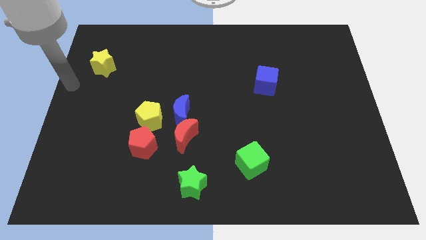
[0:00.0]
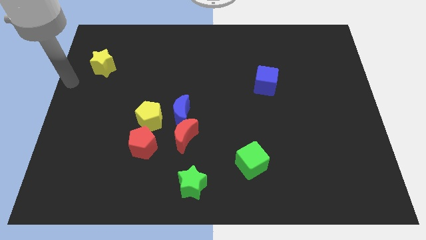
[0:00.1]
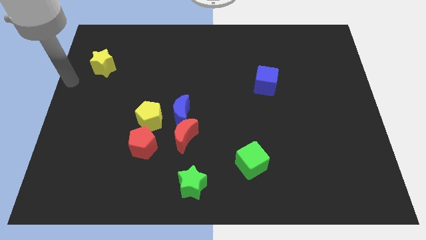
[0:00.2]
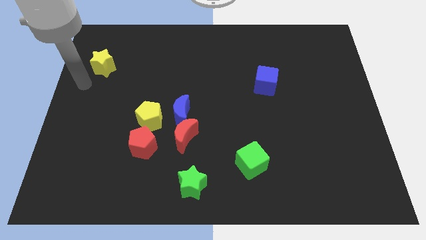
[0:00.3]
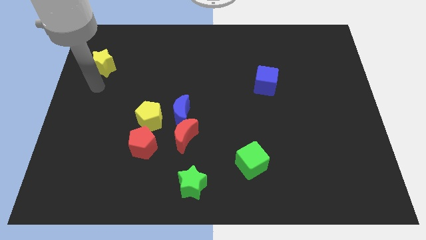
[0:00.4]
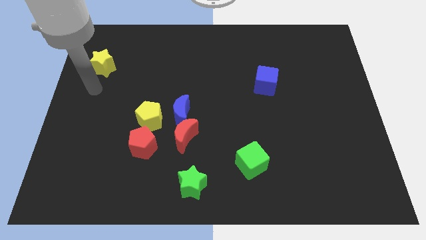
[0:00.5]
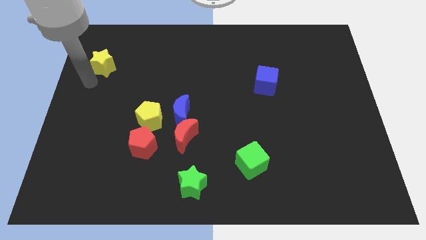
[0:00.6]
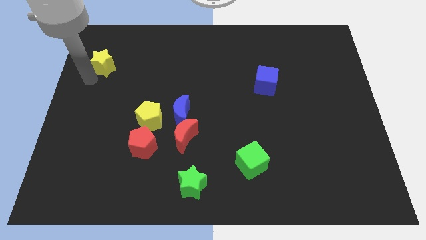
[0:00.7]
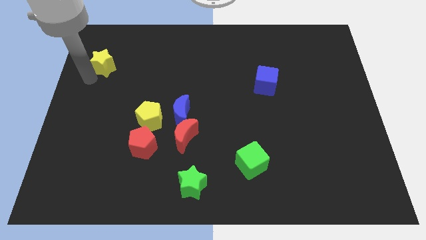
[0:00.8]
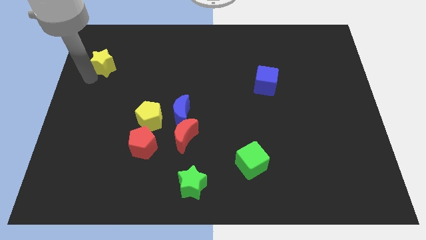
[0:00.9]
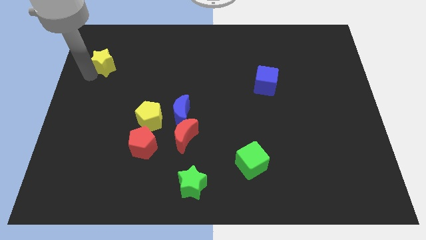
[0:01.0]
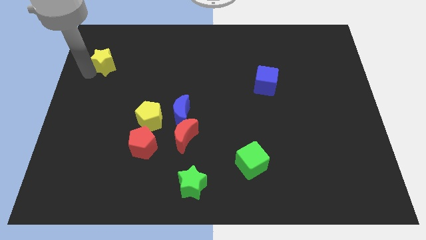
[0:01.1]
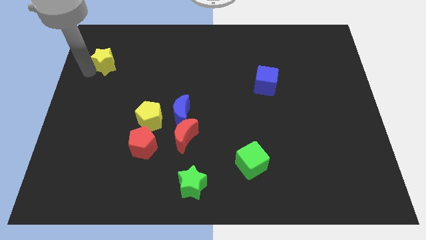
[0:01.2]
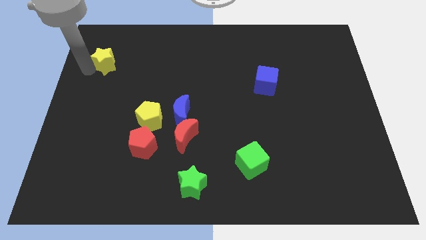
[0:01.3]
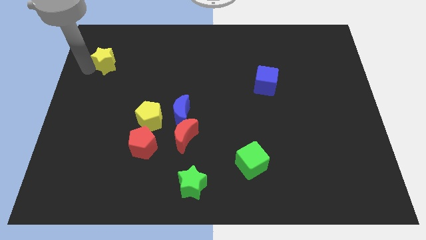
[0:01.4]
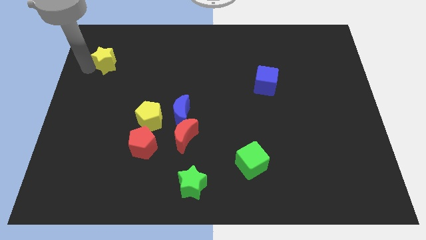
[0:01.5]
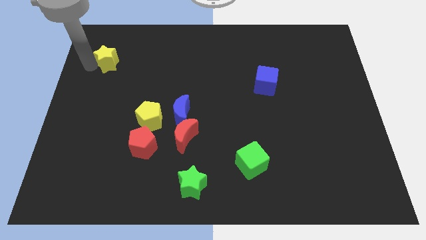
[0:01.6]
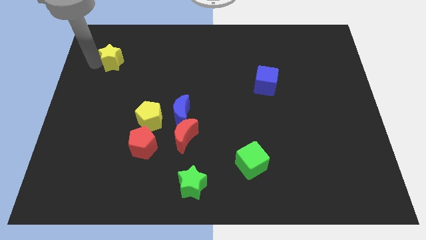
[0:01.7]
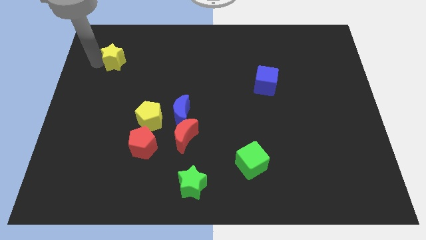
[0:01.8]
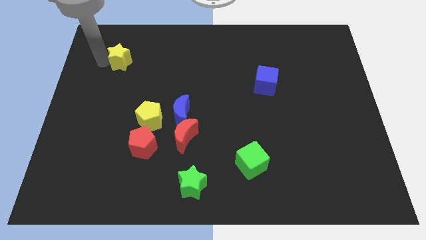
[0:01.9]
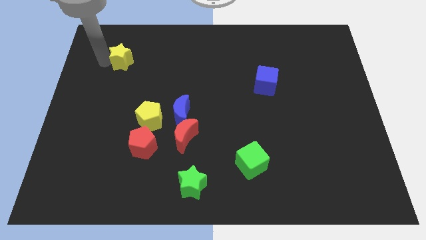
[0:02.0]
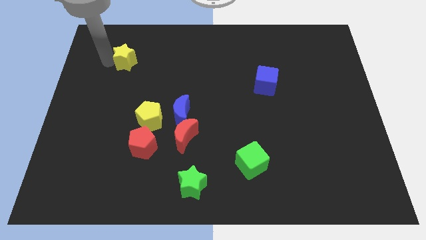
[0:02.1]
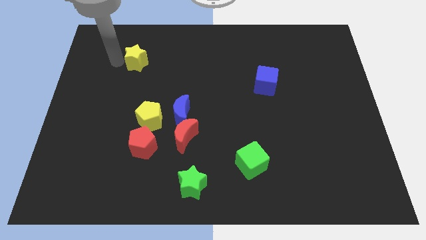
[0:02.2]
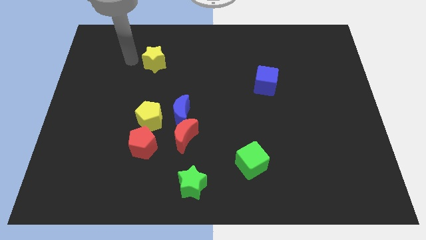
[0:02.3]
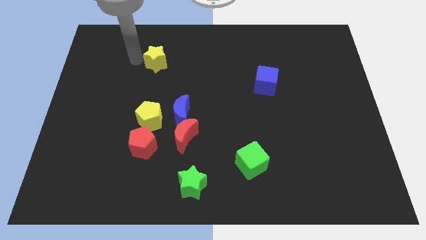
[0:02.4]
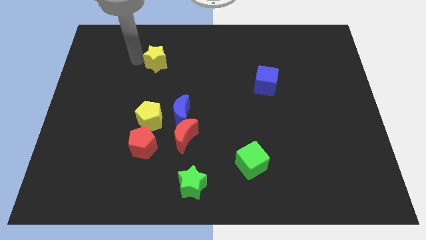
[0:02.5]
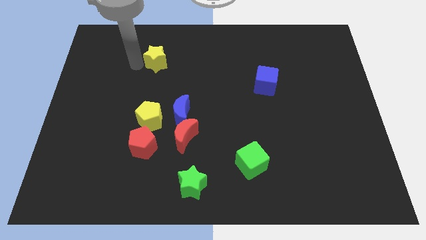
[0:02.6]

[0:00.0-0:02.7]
move yellow star parallel above yellow pentagon

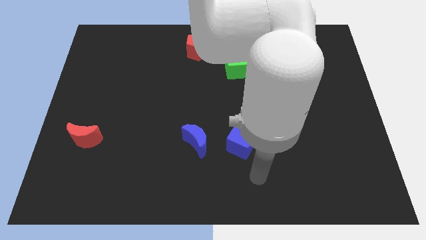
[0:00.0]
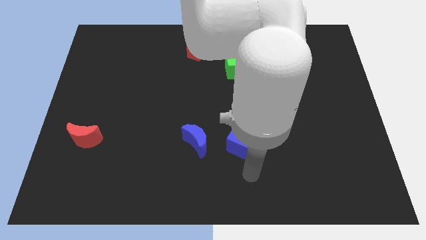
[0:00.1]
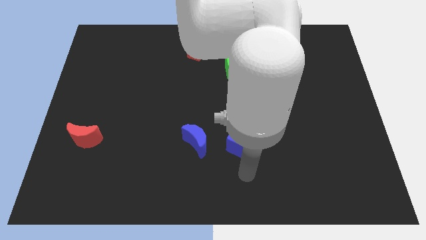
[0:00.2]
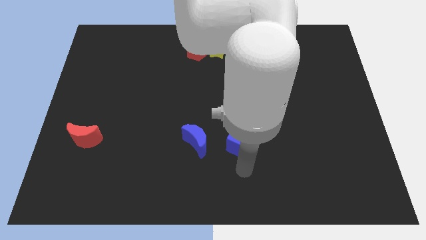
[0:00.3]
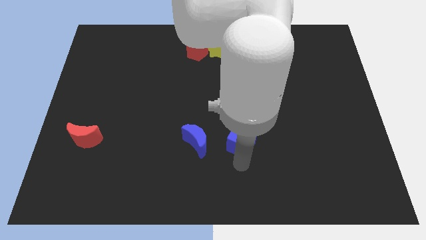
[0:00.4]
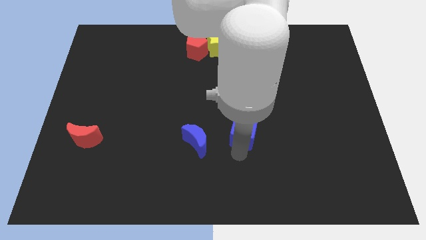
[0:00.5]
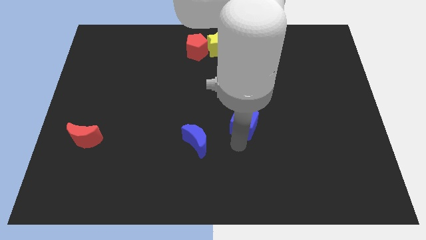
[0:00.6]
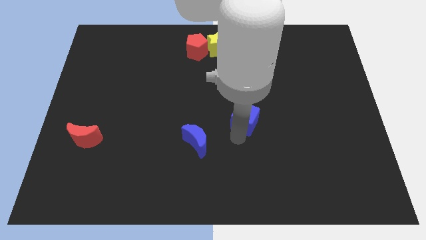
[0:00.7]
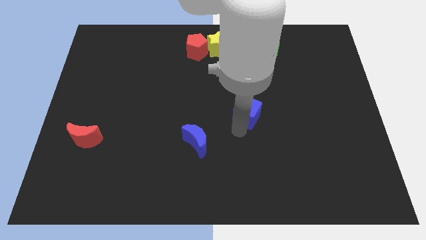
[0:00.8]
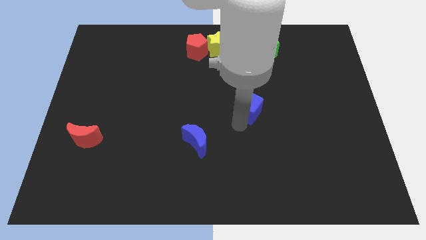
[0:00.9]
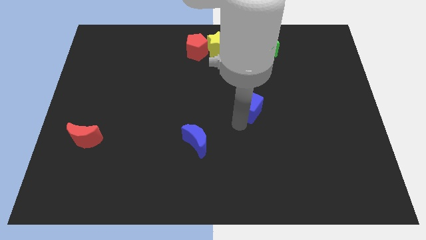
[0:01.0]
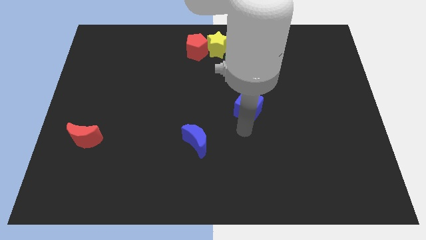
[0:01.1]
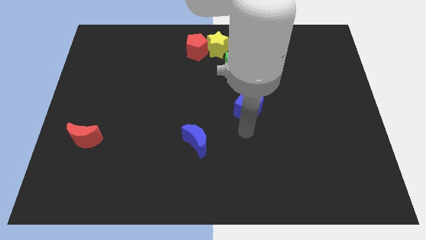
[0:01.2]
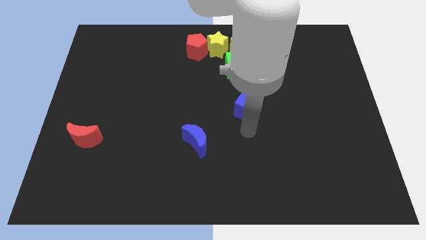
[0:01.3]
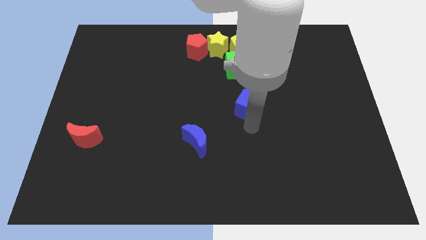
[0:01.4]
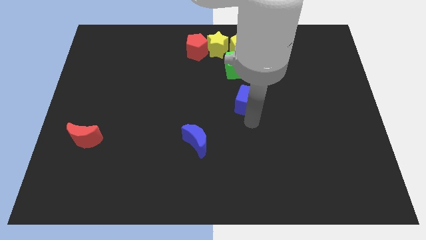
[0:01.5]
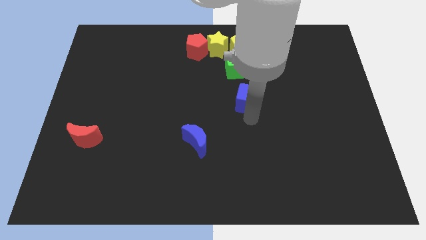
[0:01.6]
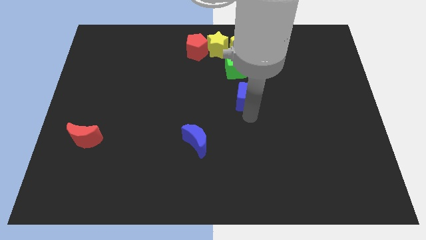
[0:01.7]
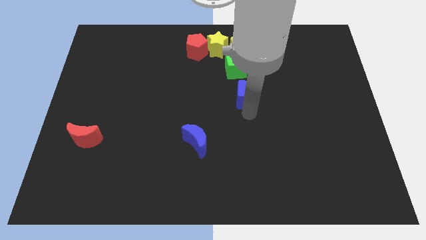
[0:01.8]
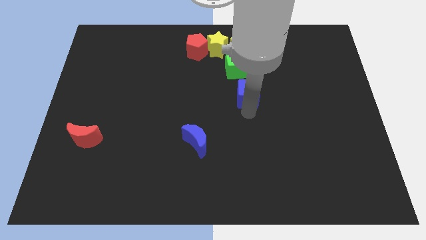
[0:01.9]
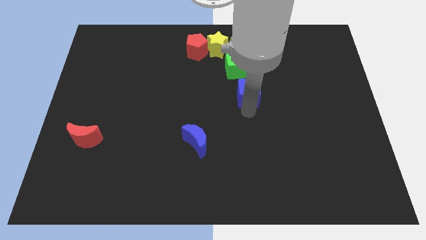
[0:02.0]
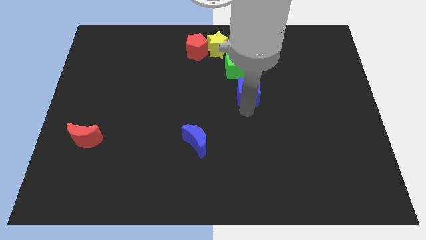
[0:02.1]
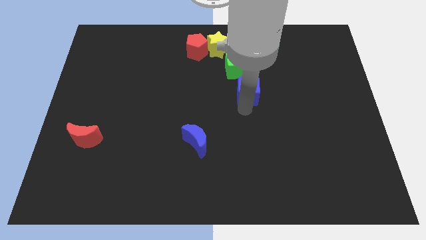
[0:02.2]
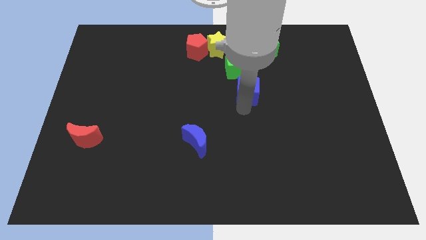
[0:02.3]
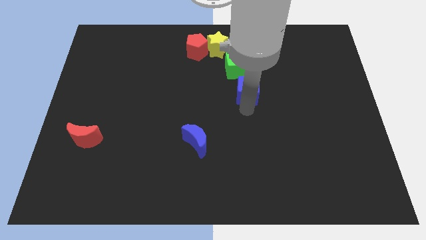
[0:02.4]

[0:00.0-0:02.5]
push the blue cube to the bottom of the green cube

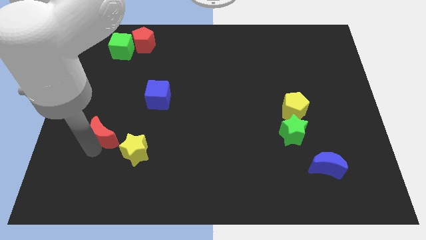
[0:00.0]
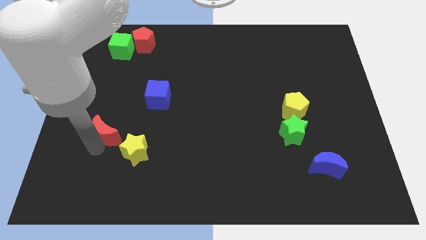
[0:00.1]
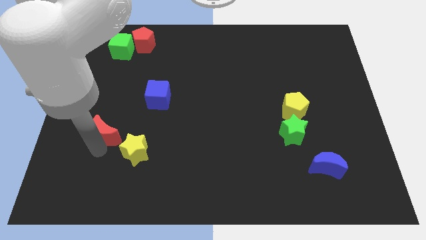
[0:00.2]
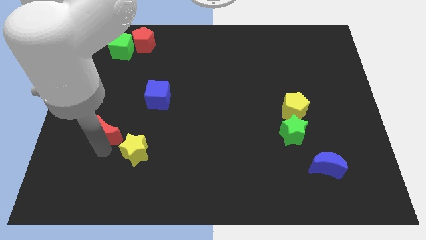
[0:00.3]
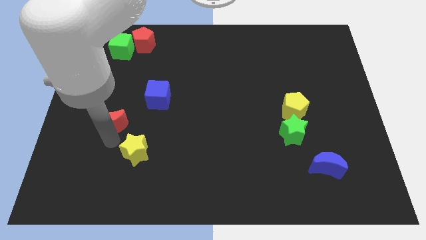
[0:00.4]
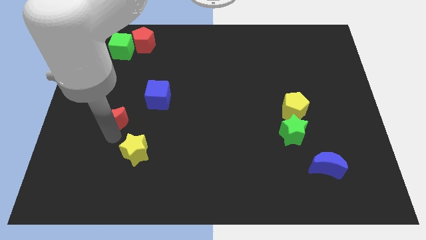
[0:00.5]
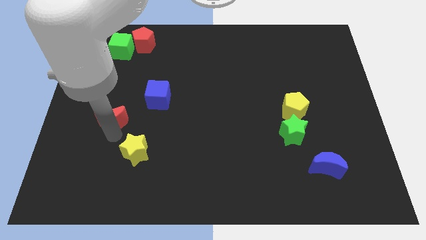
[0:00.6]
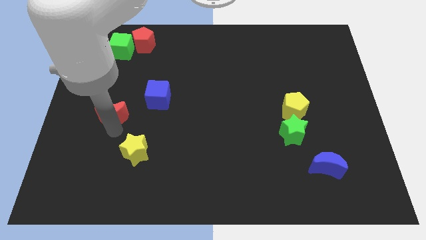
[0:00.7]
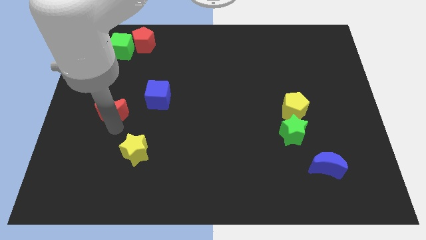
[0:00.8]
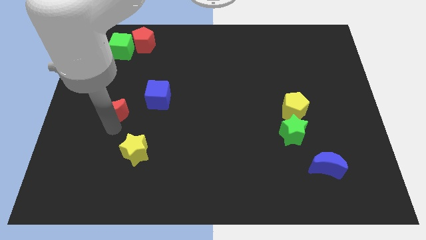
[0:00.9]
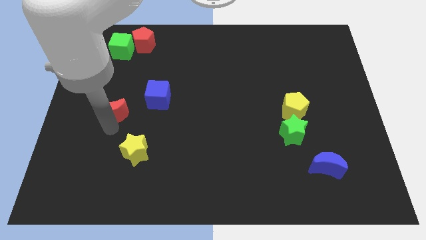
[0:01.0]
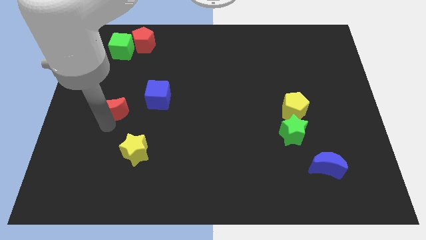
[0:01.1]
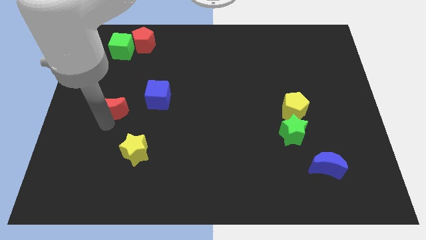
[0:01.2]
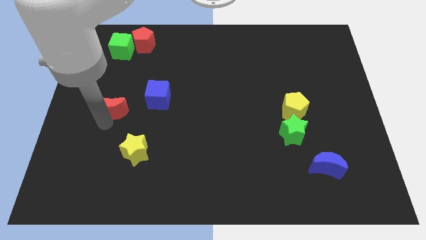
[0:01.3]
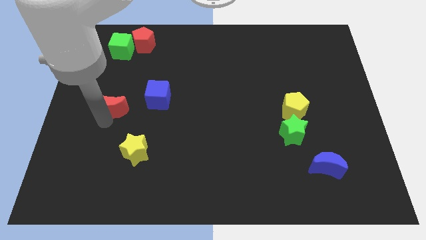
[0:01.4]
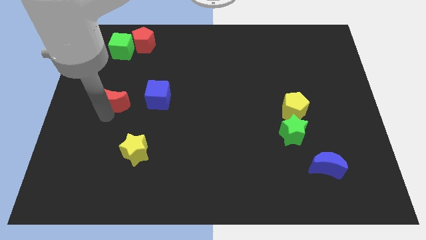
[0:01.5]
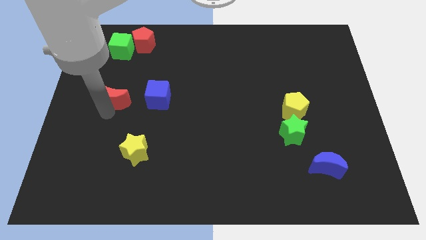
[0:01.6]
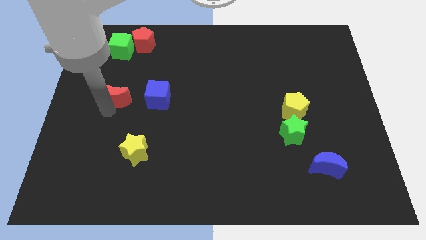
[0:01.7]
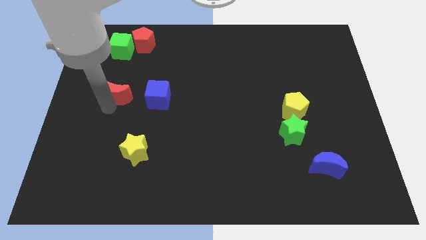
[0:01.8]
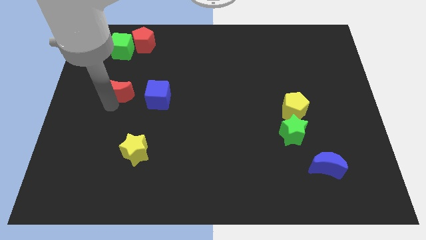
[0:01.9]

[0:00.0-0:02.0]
put the red crescent to the left side of the blue cube

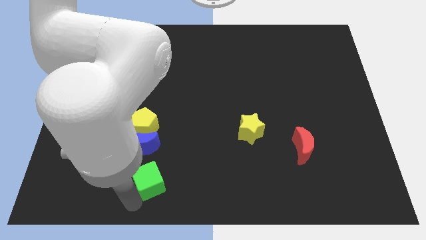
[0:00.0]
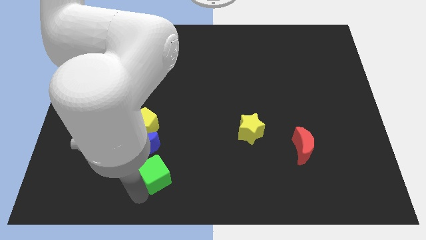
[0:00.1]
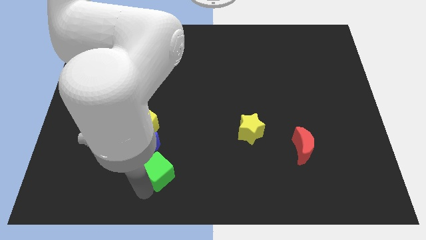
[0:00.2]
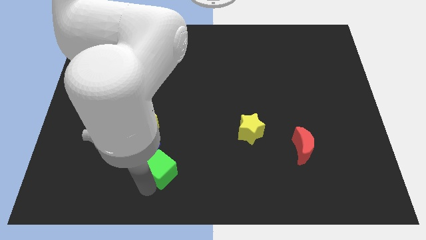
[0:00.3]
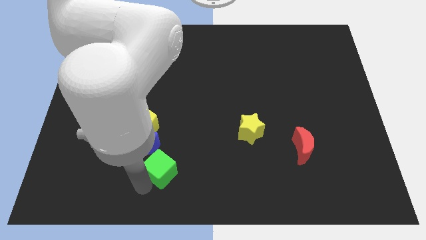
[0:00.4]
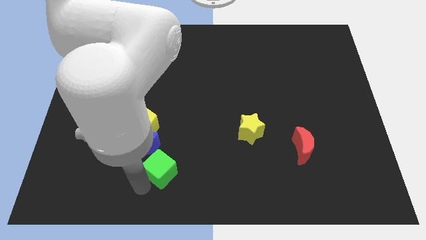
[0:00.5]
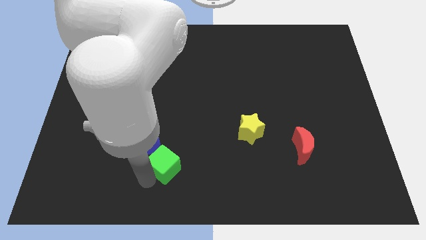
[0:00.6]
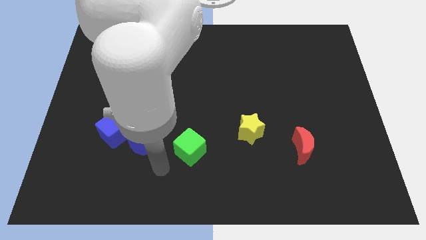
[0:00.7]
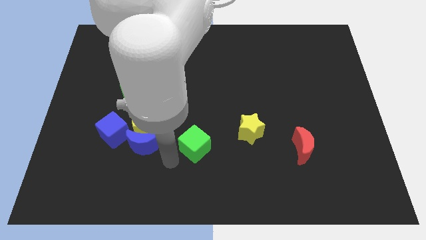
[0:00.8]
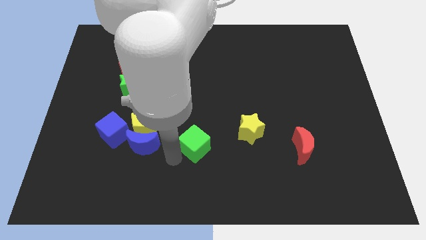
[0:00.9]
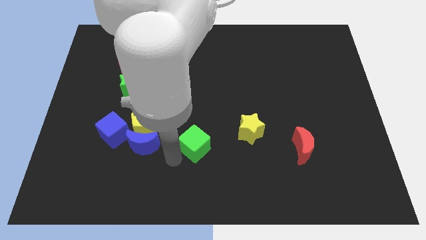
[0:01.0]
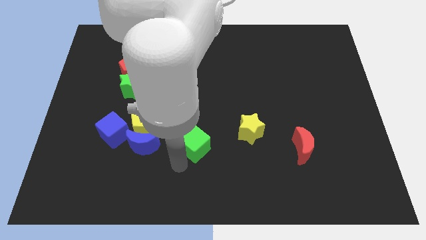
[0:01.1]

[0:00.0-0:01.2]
push the green cube to bottom left of yellow star

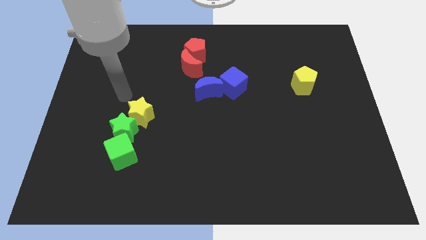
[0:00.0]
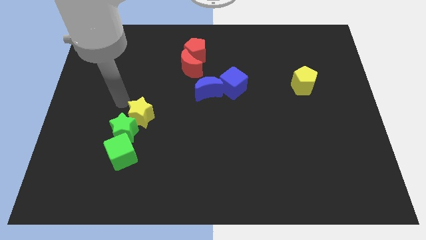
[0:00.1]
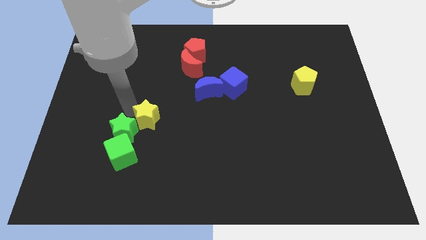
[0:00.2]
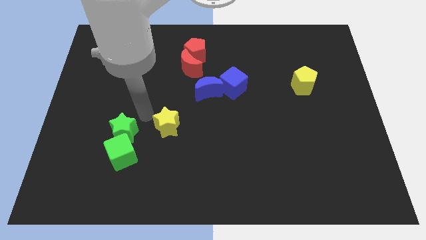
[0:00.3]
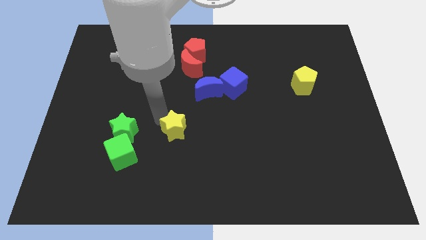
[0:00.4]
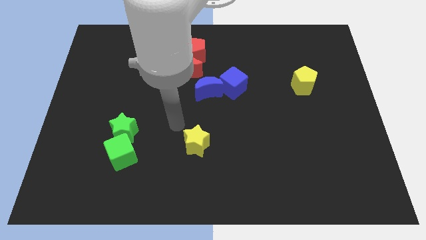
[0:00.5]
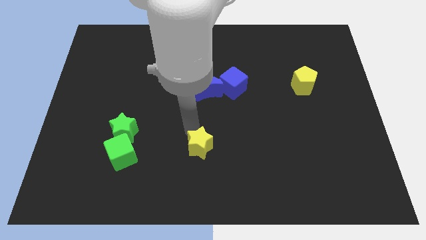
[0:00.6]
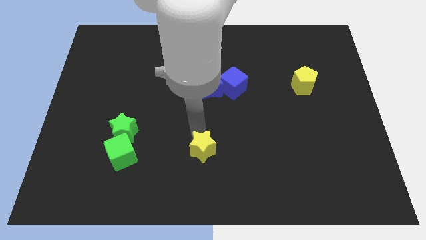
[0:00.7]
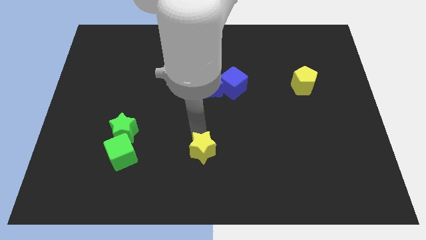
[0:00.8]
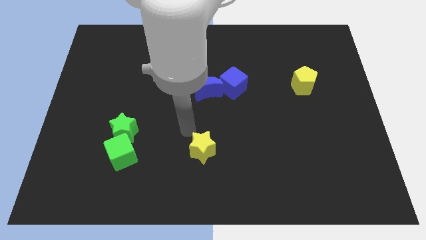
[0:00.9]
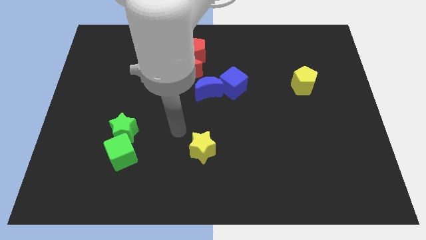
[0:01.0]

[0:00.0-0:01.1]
move the yellow star to the bottom slightly
